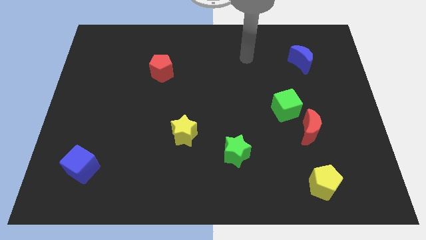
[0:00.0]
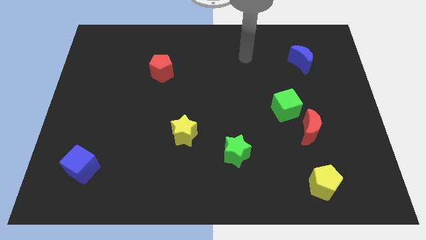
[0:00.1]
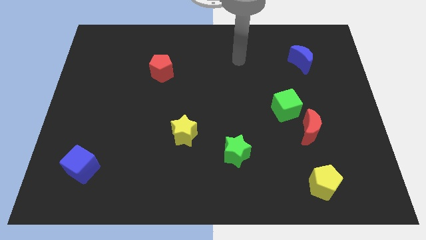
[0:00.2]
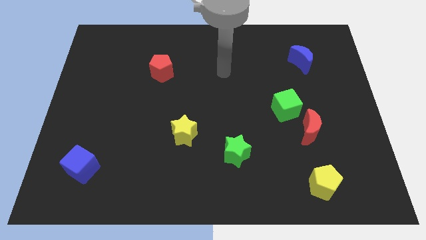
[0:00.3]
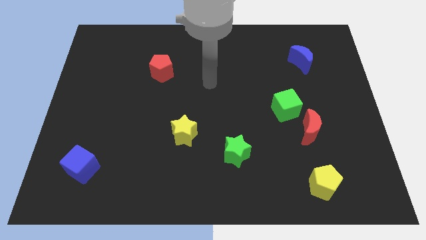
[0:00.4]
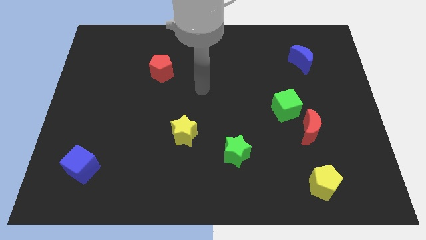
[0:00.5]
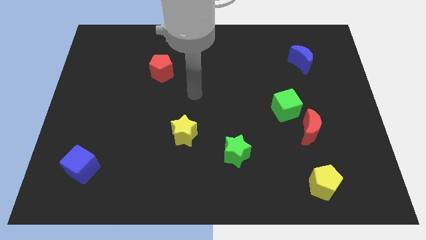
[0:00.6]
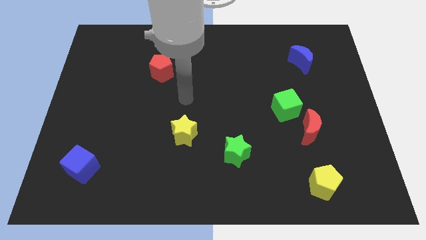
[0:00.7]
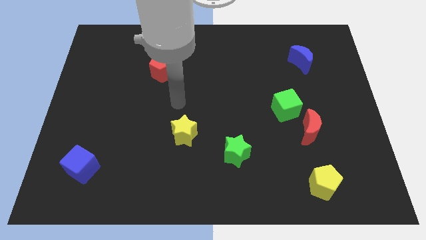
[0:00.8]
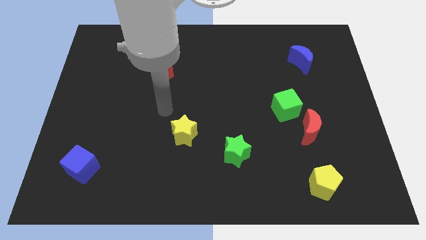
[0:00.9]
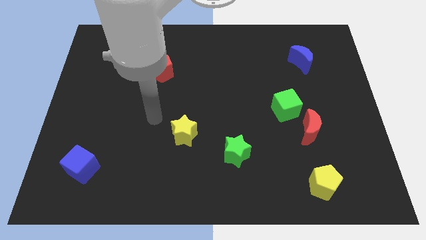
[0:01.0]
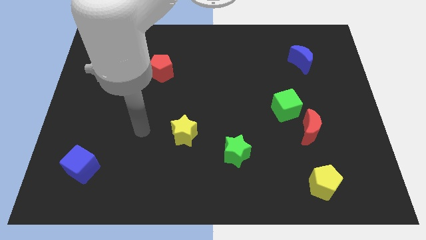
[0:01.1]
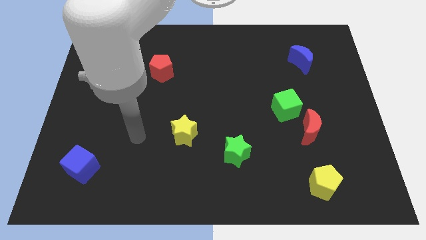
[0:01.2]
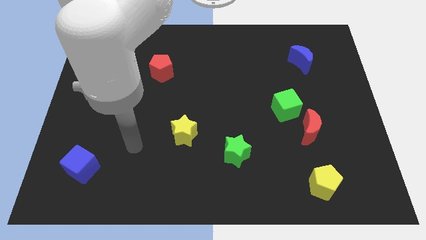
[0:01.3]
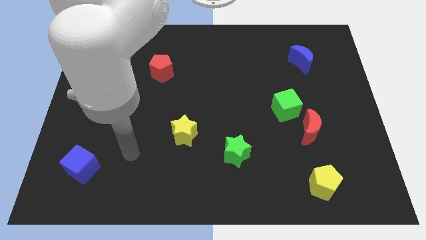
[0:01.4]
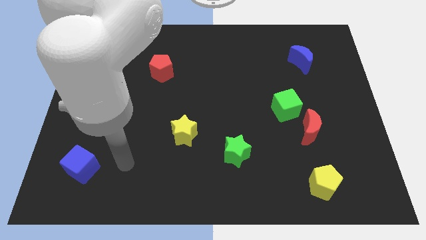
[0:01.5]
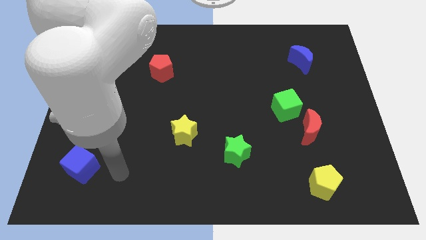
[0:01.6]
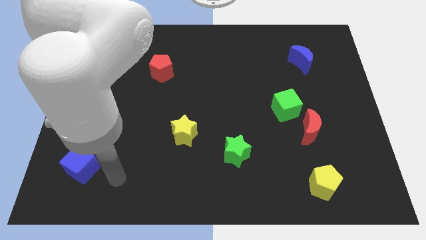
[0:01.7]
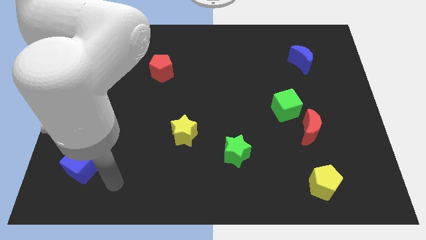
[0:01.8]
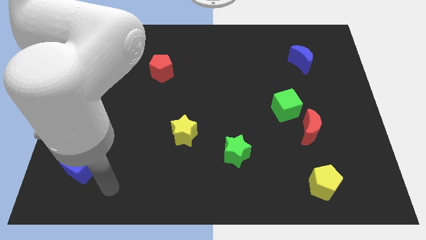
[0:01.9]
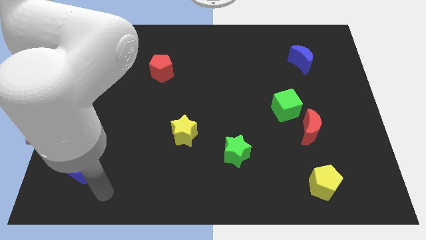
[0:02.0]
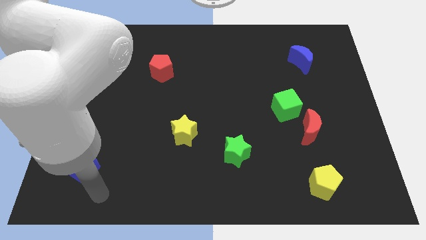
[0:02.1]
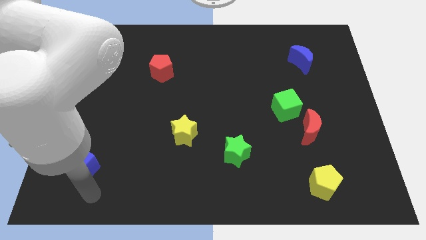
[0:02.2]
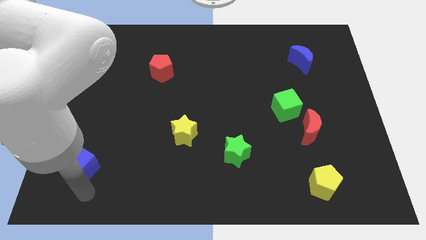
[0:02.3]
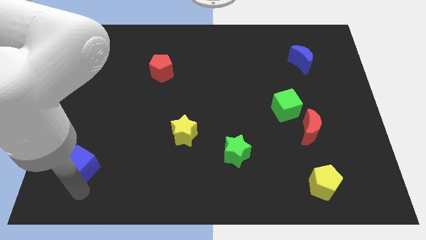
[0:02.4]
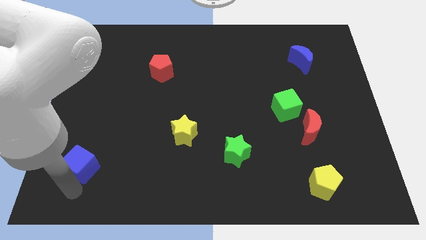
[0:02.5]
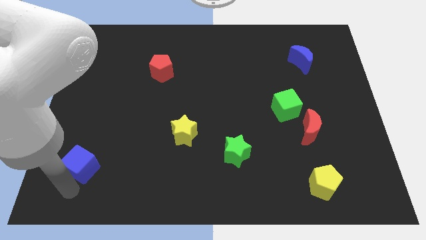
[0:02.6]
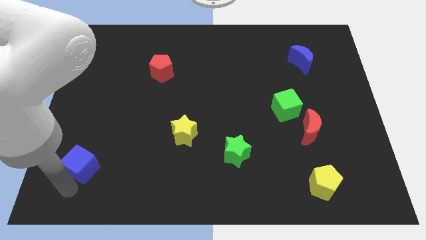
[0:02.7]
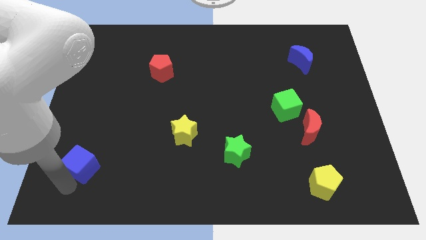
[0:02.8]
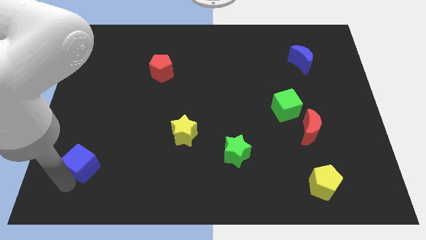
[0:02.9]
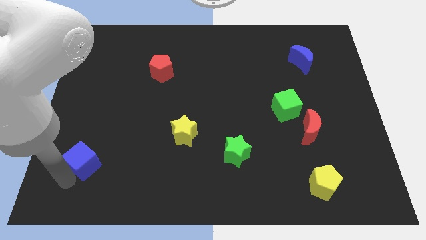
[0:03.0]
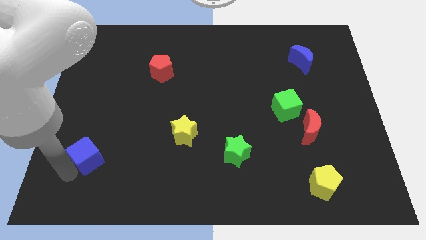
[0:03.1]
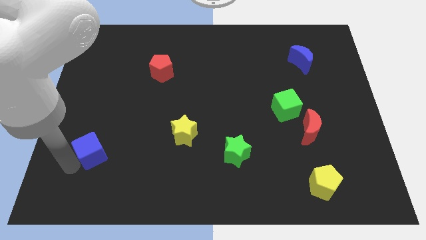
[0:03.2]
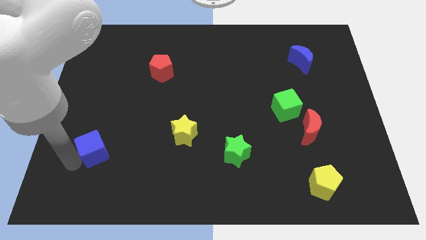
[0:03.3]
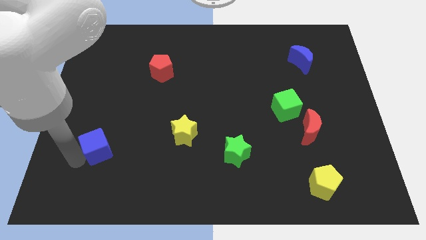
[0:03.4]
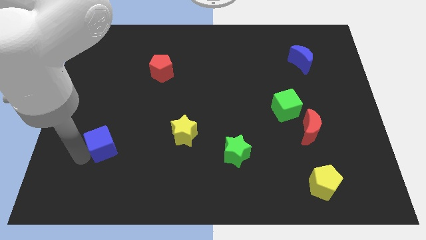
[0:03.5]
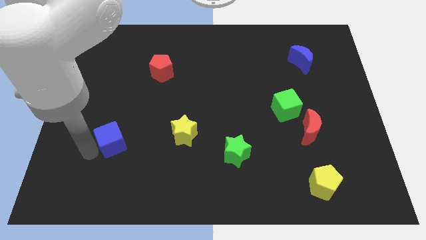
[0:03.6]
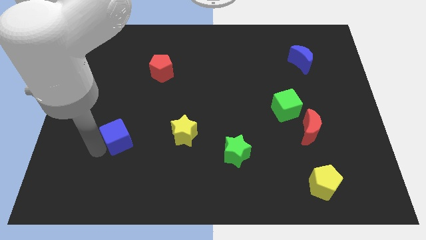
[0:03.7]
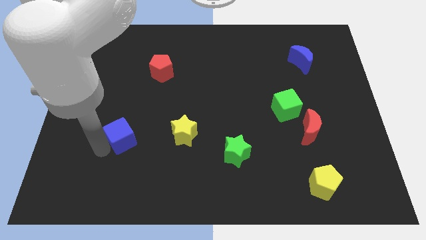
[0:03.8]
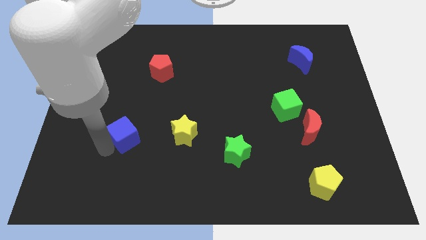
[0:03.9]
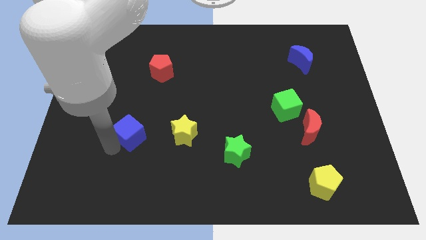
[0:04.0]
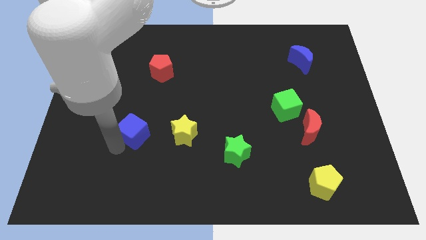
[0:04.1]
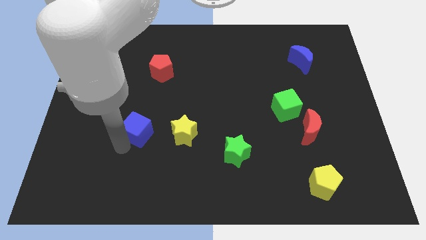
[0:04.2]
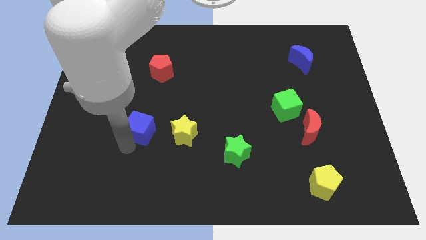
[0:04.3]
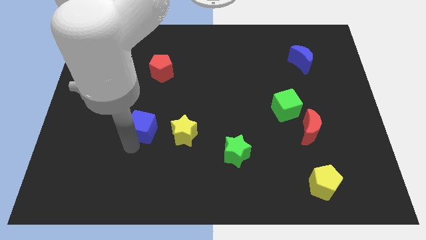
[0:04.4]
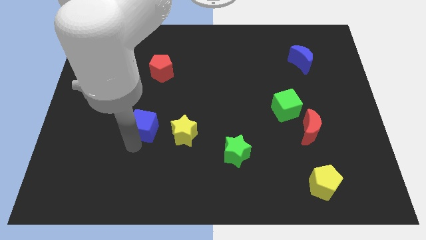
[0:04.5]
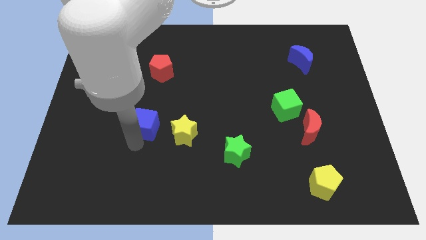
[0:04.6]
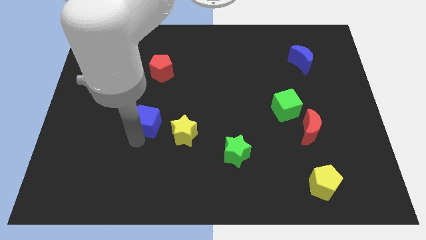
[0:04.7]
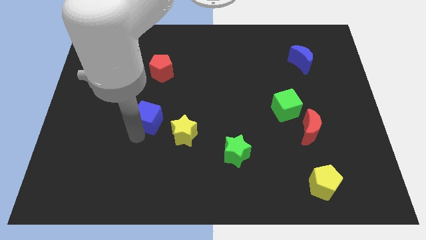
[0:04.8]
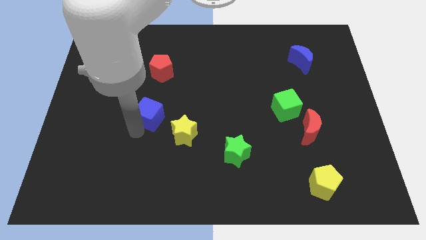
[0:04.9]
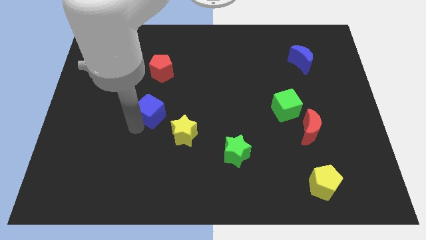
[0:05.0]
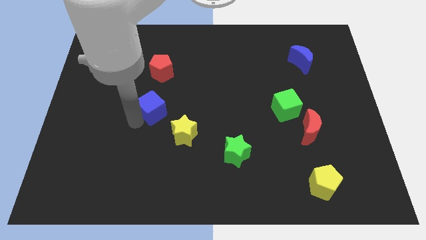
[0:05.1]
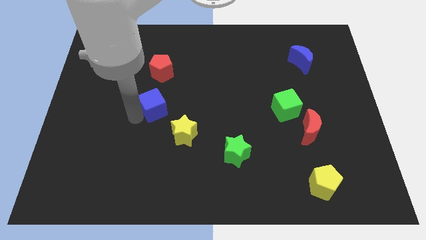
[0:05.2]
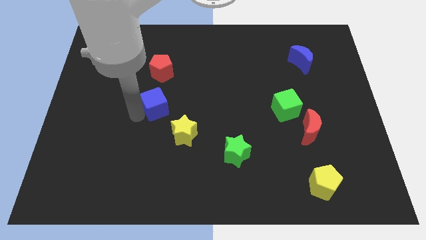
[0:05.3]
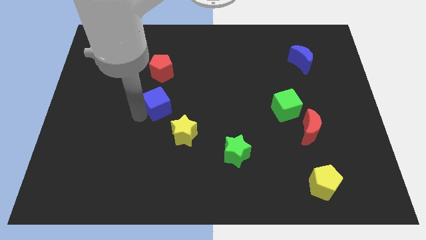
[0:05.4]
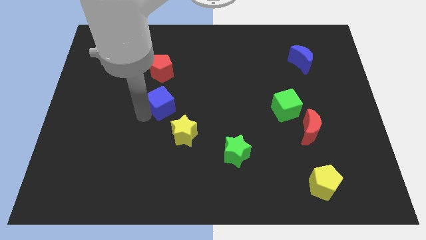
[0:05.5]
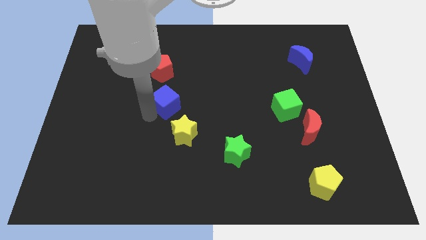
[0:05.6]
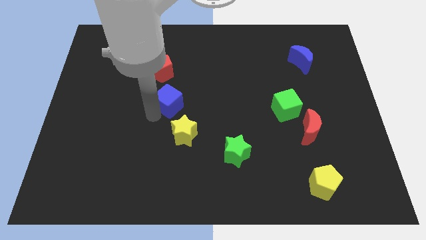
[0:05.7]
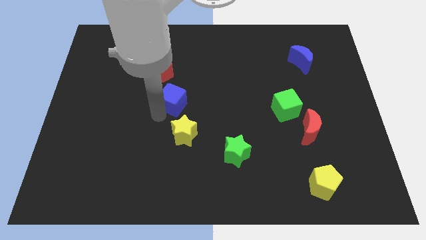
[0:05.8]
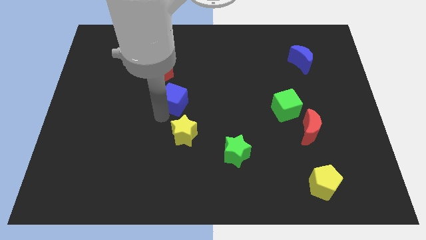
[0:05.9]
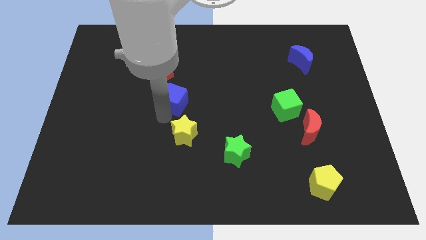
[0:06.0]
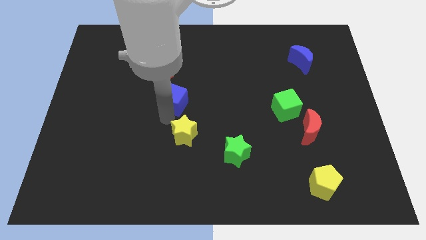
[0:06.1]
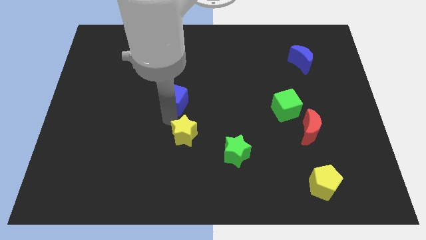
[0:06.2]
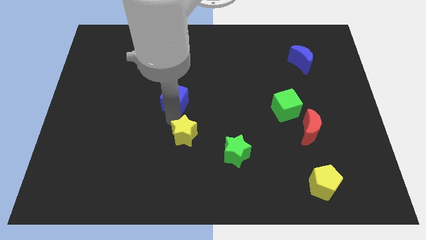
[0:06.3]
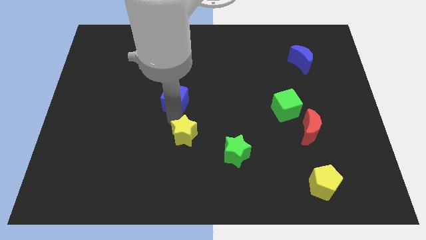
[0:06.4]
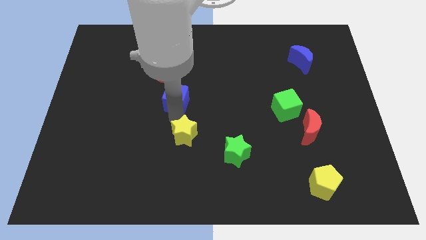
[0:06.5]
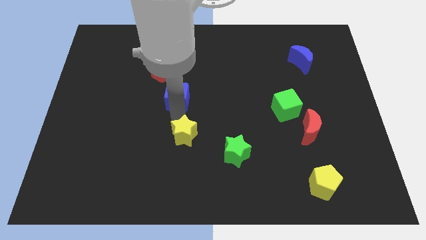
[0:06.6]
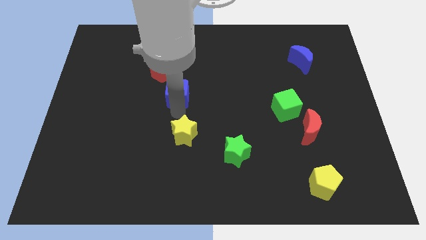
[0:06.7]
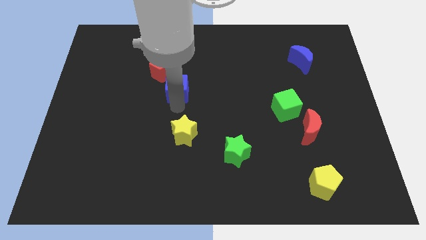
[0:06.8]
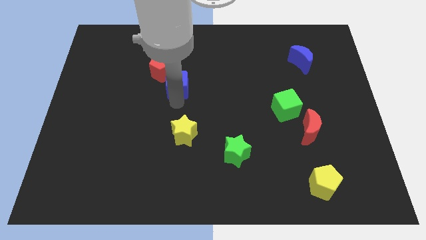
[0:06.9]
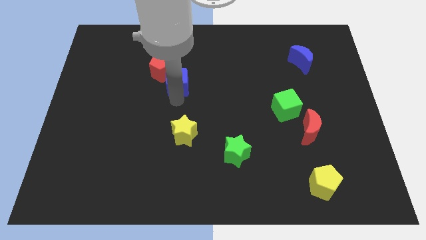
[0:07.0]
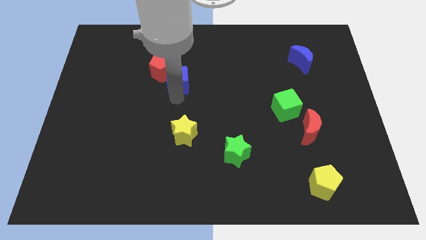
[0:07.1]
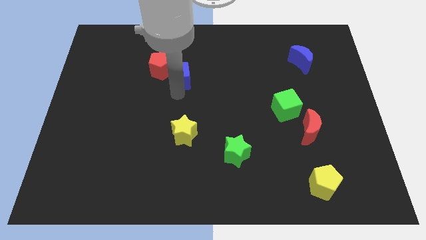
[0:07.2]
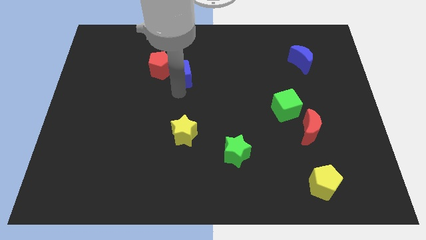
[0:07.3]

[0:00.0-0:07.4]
slide the blue cube towards the red pentagon

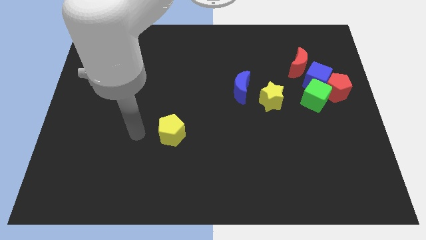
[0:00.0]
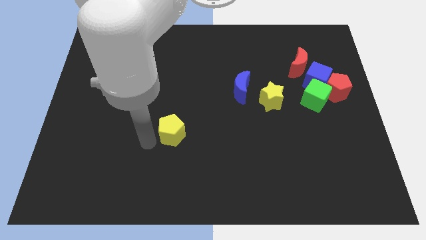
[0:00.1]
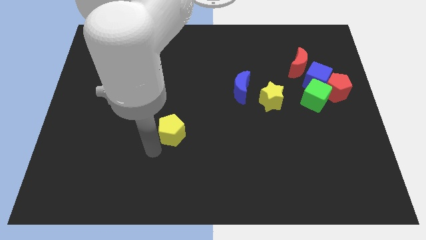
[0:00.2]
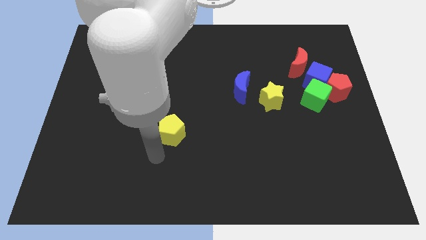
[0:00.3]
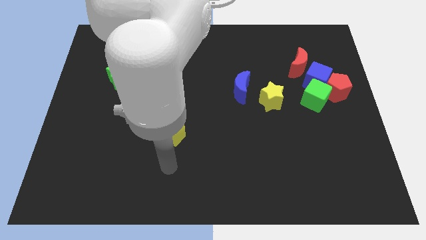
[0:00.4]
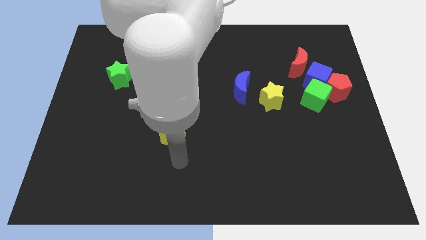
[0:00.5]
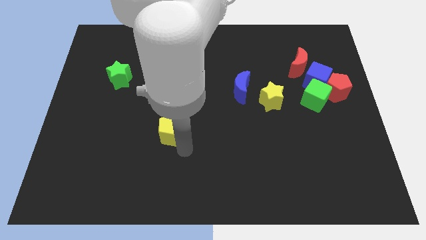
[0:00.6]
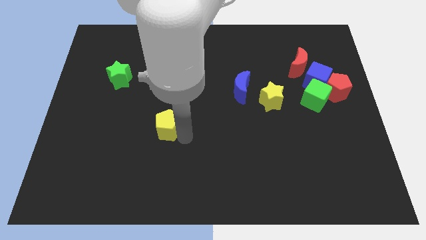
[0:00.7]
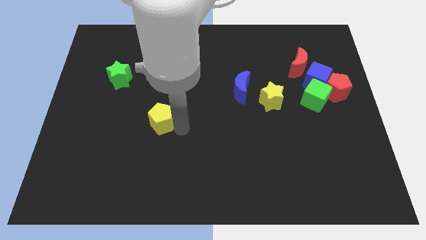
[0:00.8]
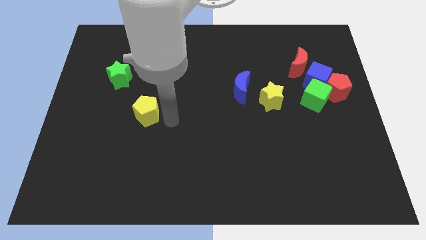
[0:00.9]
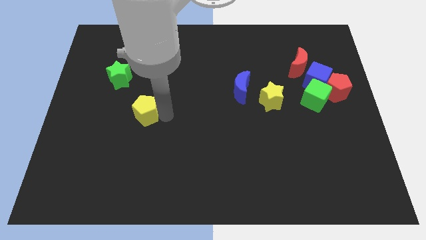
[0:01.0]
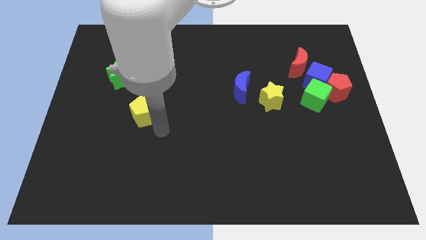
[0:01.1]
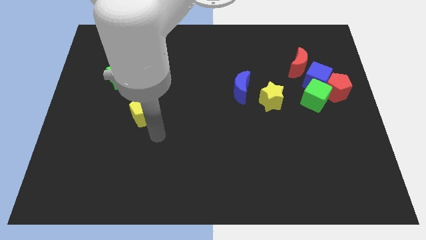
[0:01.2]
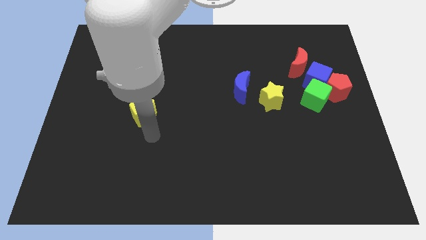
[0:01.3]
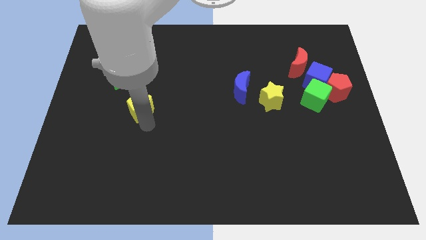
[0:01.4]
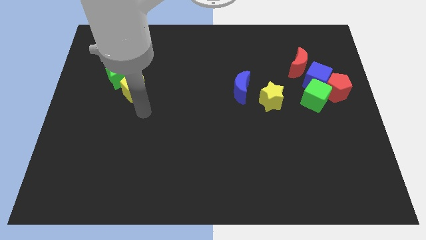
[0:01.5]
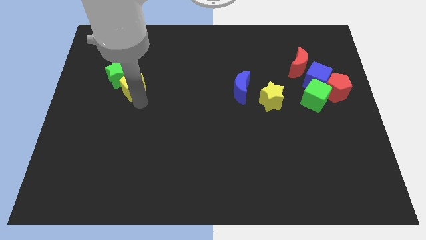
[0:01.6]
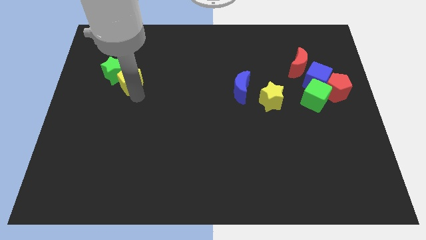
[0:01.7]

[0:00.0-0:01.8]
push the yellow pentagon to the green star
